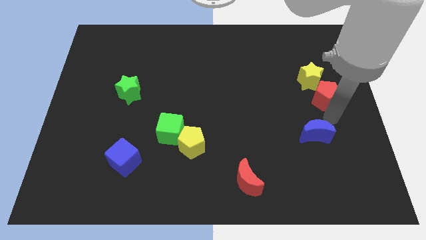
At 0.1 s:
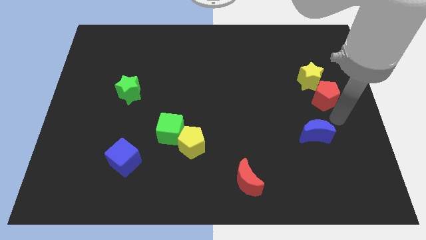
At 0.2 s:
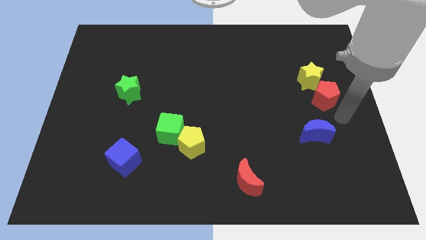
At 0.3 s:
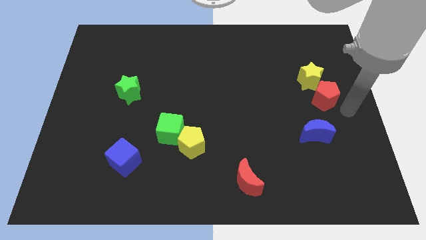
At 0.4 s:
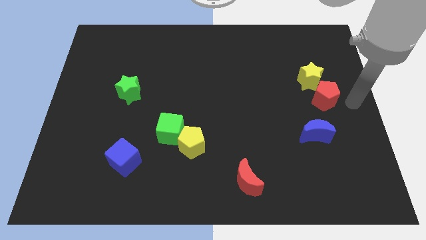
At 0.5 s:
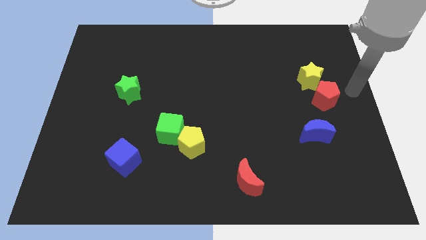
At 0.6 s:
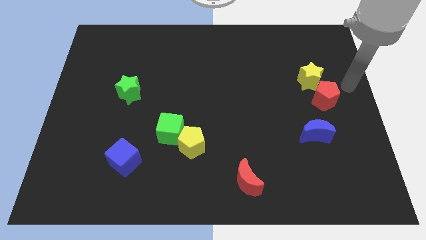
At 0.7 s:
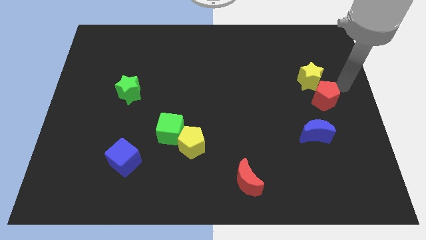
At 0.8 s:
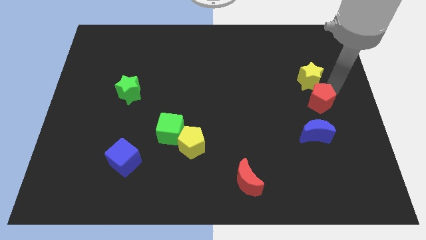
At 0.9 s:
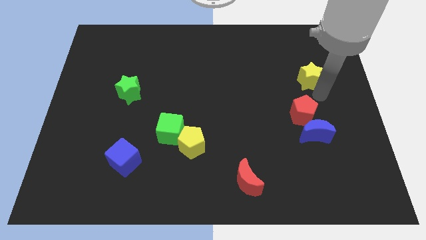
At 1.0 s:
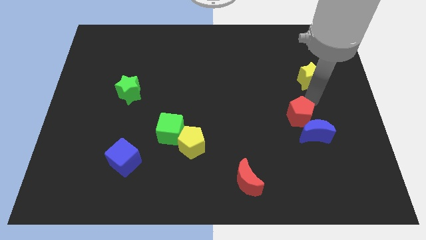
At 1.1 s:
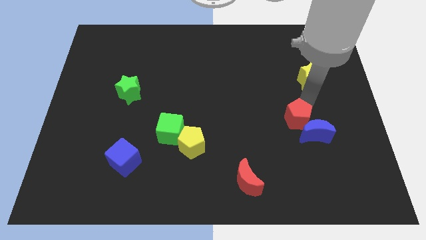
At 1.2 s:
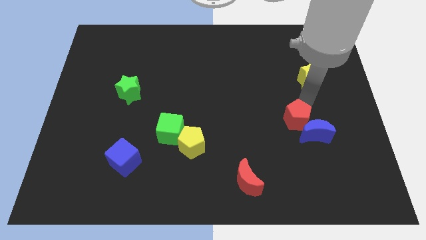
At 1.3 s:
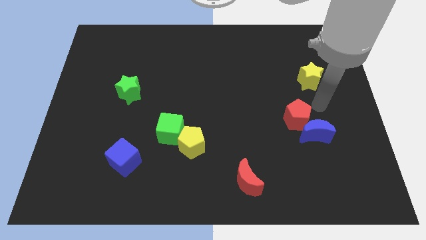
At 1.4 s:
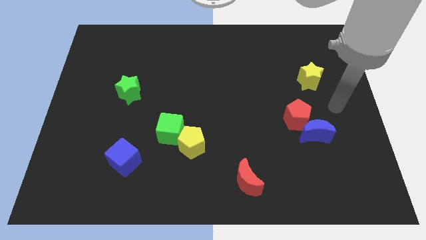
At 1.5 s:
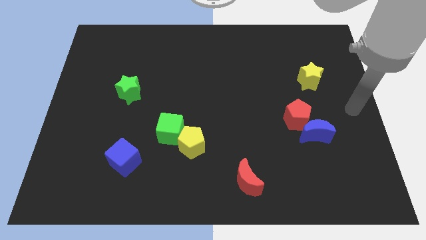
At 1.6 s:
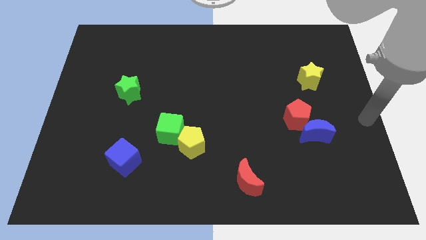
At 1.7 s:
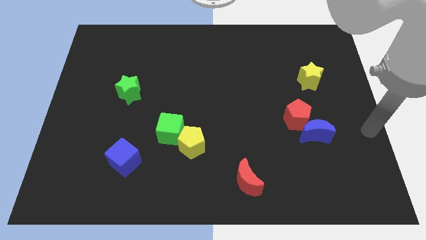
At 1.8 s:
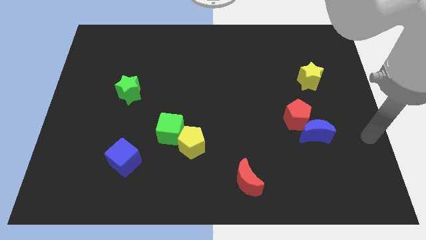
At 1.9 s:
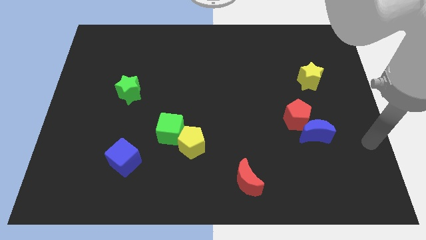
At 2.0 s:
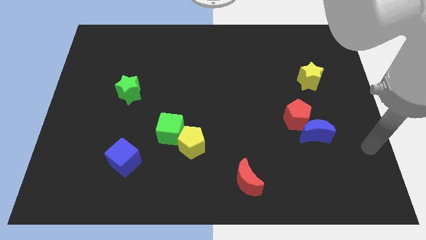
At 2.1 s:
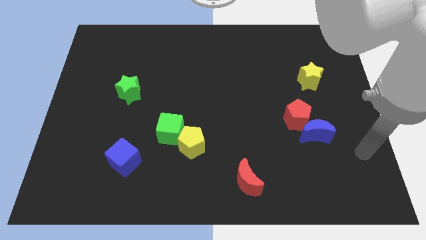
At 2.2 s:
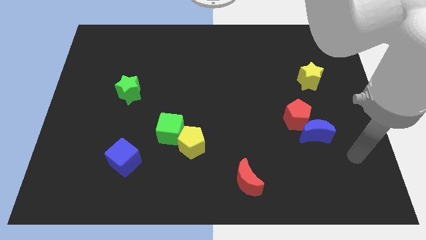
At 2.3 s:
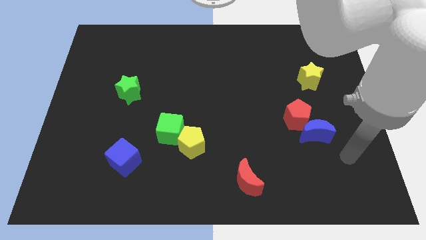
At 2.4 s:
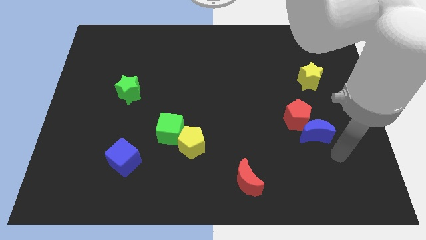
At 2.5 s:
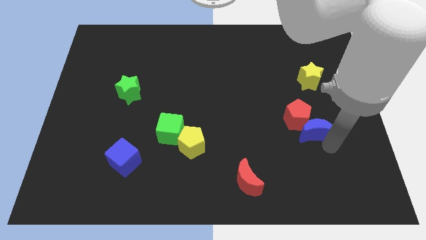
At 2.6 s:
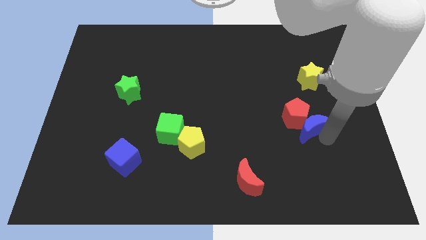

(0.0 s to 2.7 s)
move the red pentagon to the top left of the blue crescent

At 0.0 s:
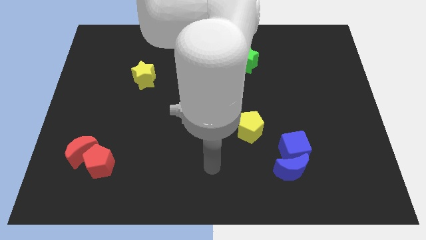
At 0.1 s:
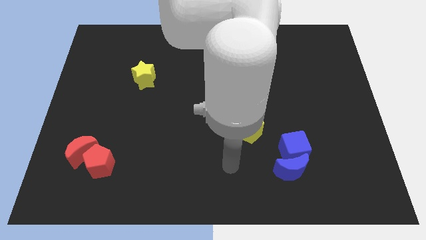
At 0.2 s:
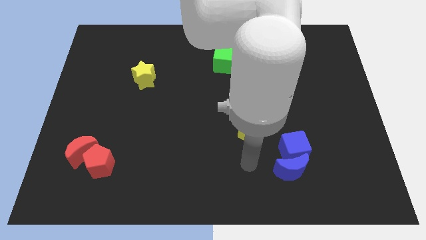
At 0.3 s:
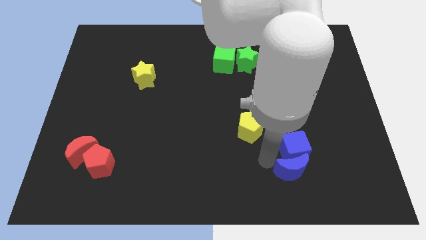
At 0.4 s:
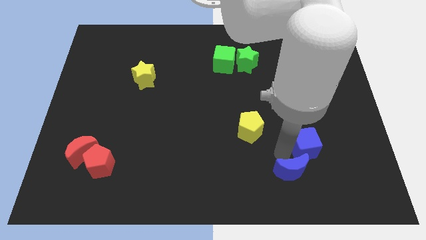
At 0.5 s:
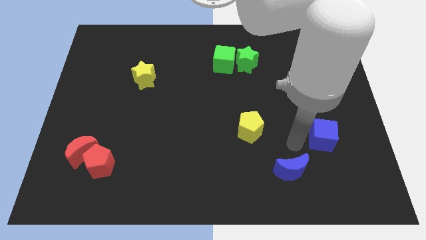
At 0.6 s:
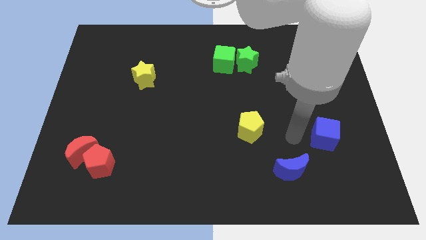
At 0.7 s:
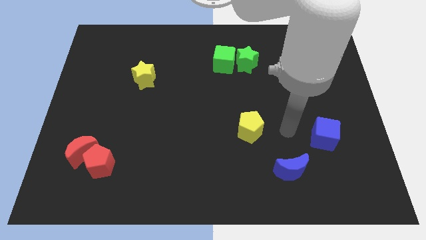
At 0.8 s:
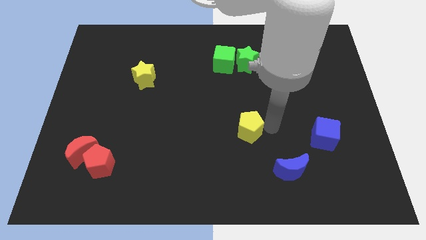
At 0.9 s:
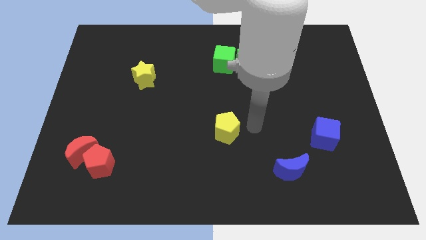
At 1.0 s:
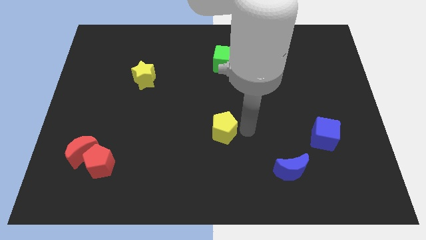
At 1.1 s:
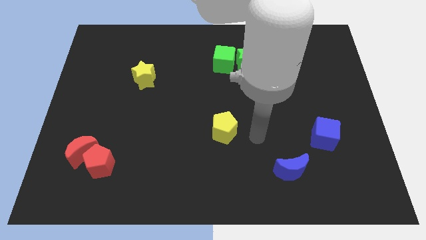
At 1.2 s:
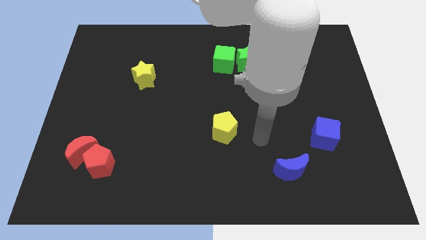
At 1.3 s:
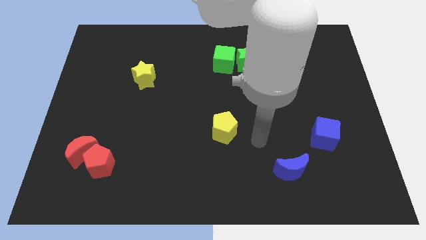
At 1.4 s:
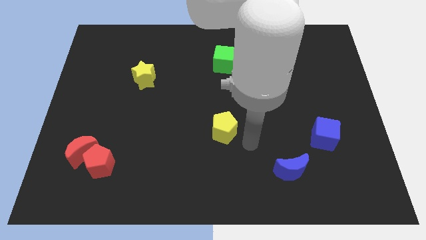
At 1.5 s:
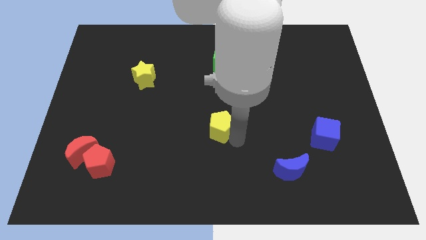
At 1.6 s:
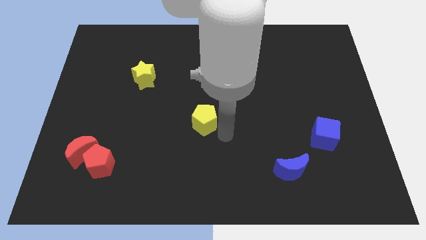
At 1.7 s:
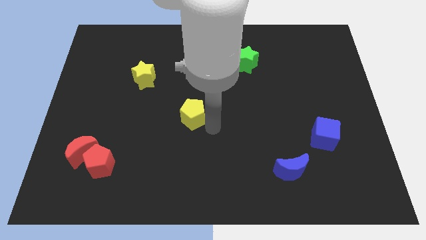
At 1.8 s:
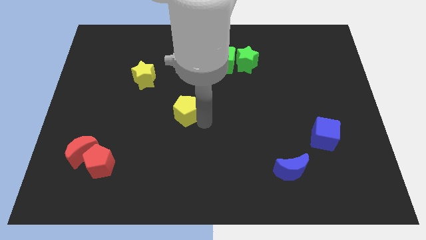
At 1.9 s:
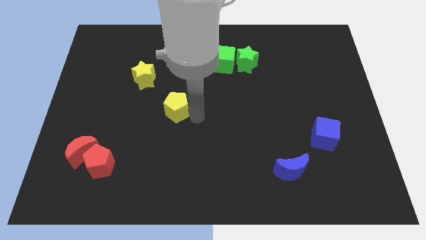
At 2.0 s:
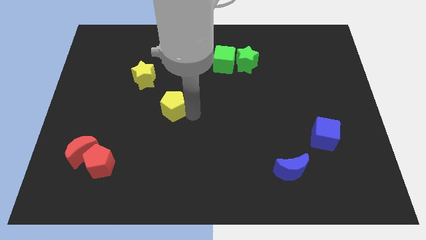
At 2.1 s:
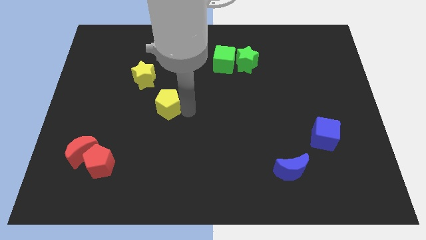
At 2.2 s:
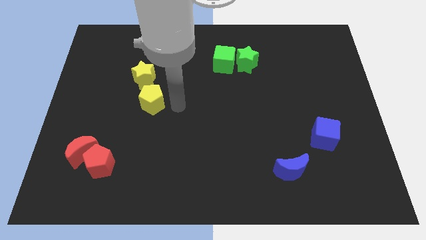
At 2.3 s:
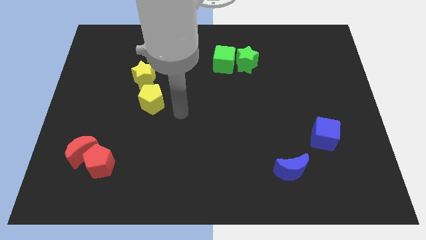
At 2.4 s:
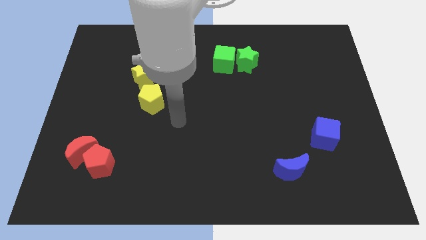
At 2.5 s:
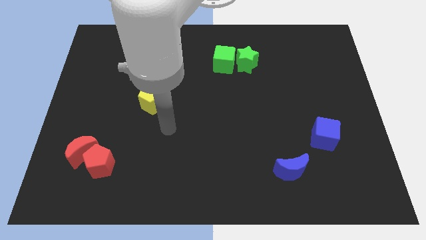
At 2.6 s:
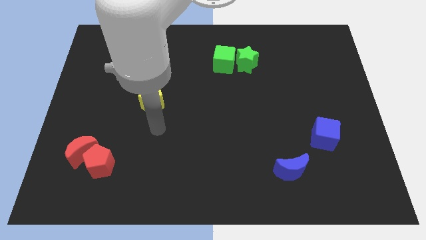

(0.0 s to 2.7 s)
move the yellow pentagon below the yellow star

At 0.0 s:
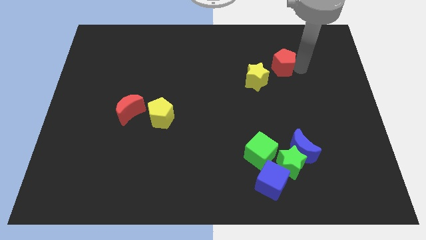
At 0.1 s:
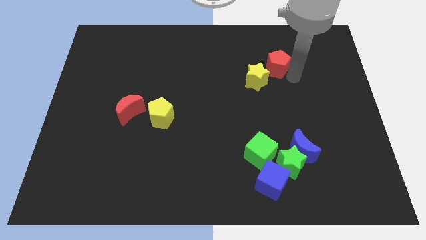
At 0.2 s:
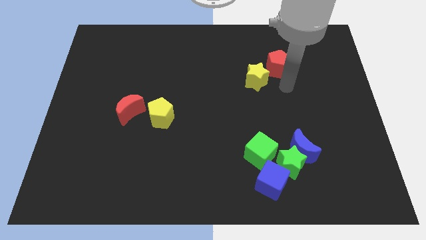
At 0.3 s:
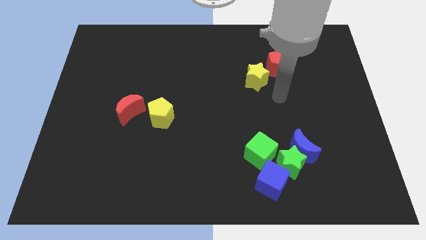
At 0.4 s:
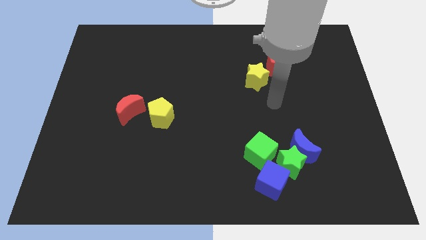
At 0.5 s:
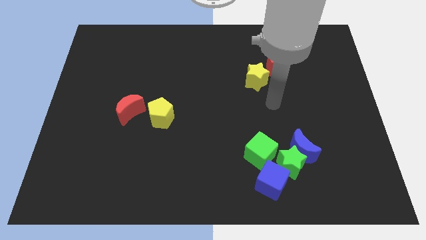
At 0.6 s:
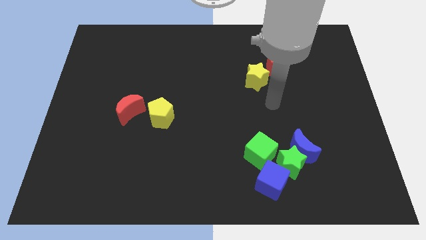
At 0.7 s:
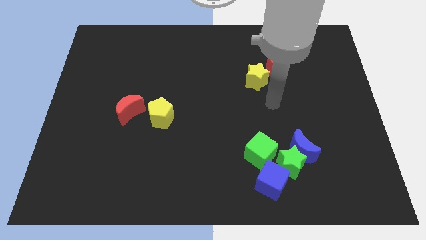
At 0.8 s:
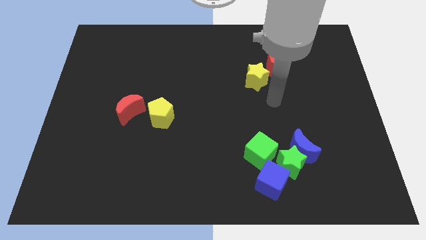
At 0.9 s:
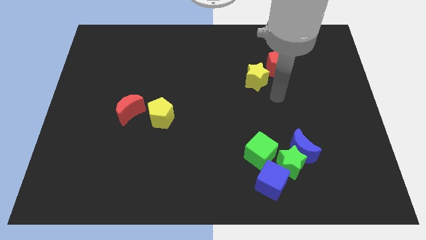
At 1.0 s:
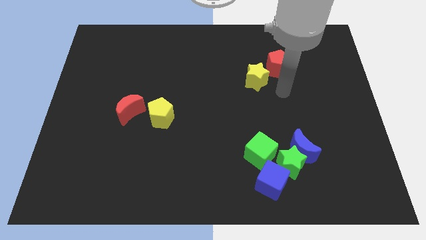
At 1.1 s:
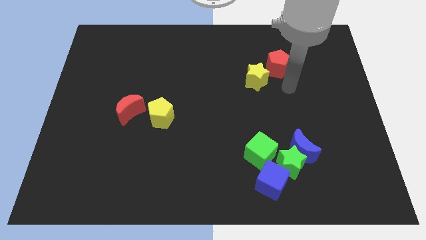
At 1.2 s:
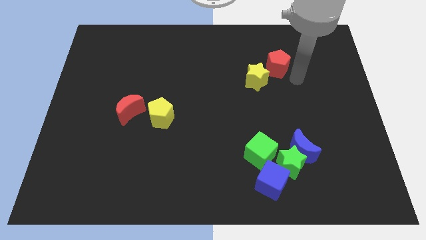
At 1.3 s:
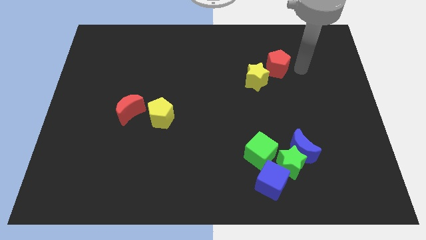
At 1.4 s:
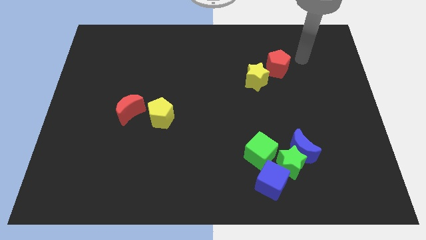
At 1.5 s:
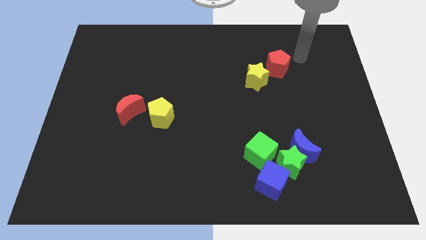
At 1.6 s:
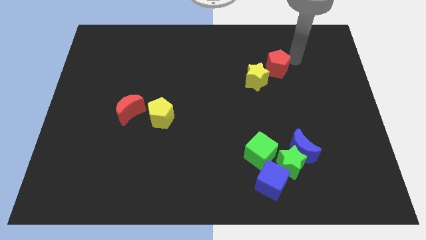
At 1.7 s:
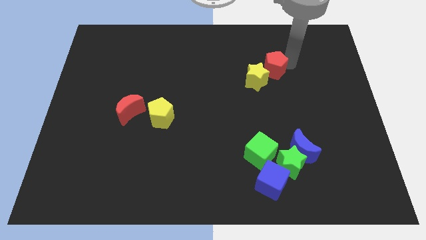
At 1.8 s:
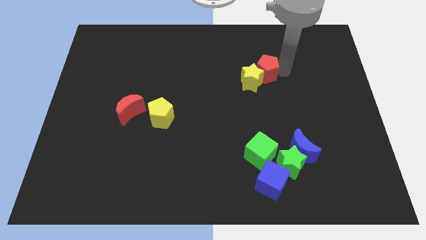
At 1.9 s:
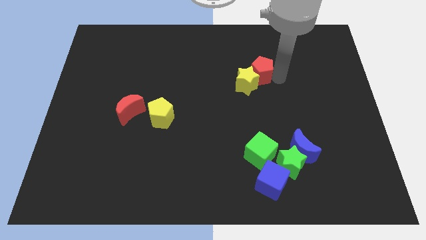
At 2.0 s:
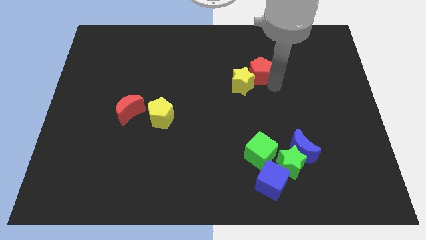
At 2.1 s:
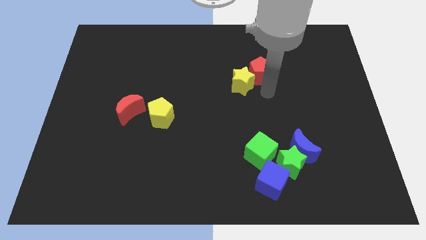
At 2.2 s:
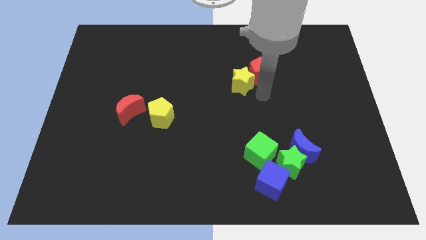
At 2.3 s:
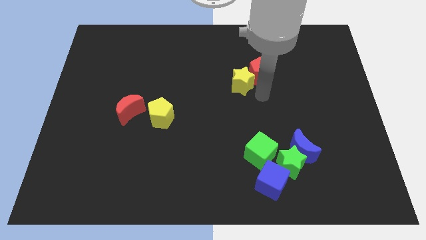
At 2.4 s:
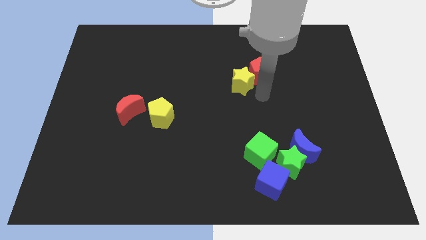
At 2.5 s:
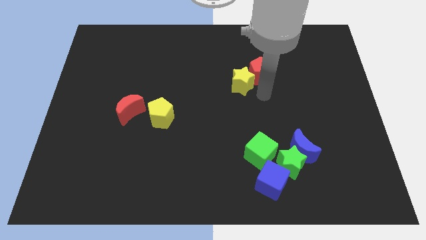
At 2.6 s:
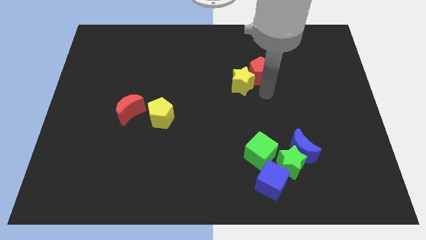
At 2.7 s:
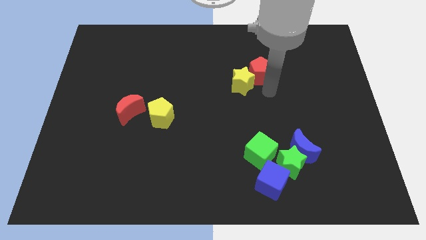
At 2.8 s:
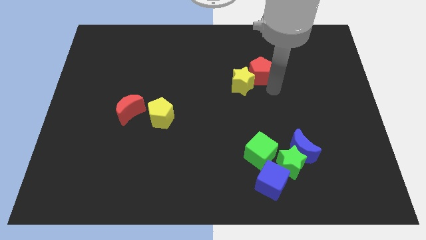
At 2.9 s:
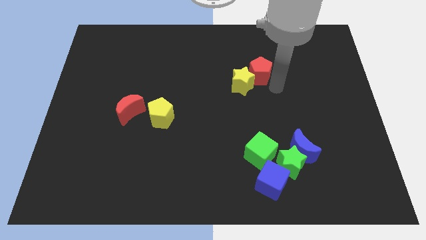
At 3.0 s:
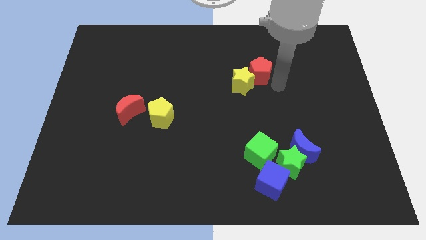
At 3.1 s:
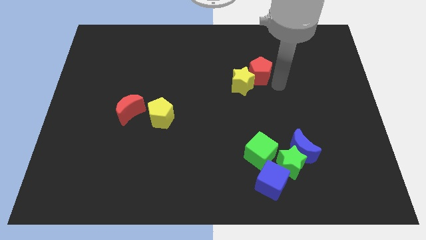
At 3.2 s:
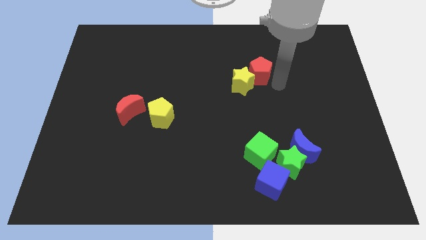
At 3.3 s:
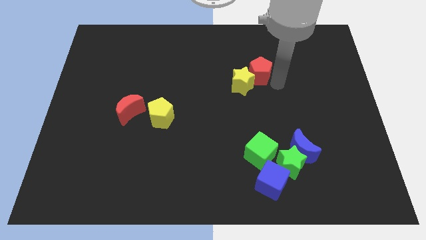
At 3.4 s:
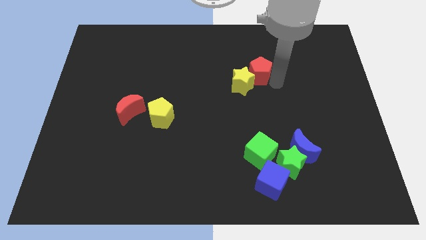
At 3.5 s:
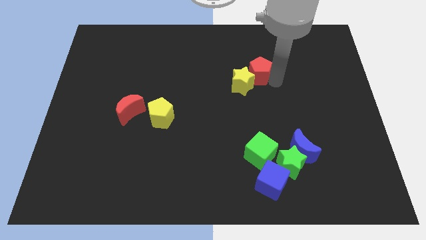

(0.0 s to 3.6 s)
push the red pentagon into the yellow star

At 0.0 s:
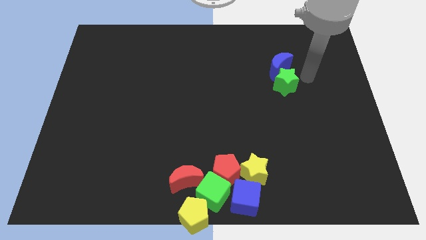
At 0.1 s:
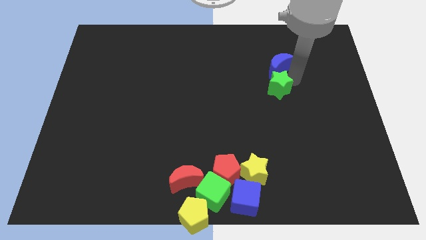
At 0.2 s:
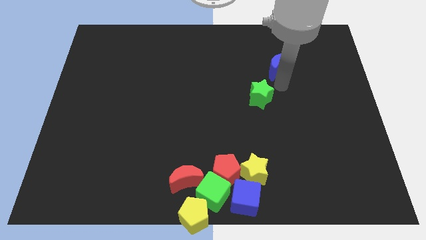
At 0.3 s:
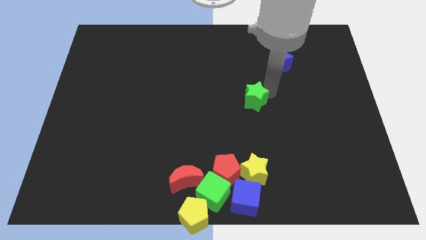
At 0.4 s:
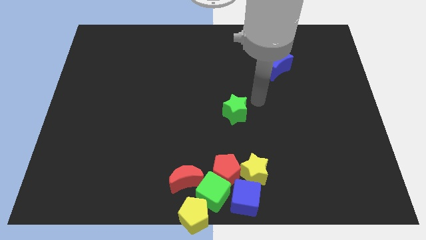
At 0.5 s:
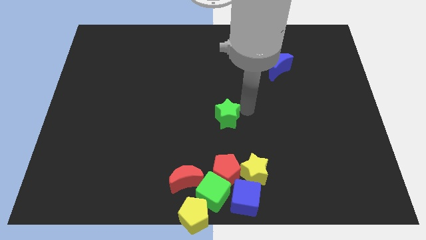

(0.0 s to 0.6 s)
separate green star and blue moon
